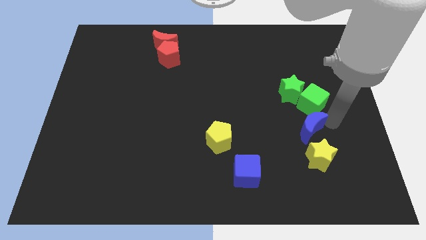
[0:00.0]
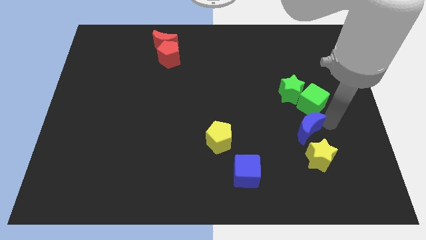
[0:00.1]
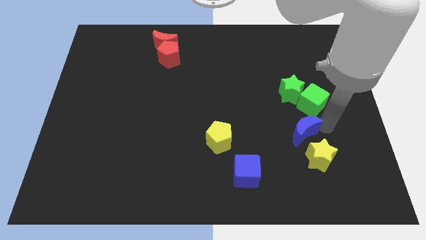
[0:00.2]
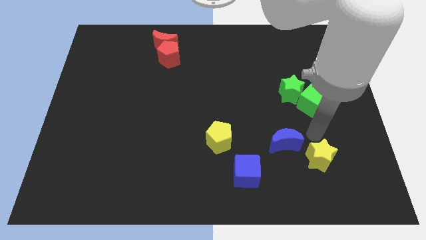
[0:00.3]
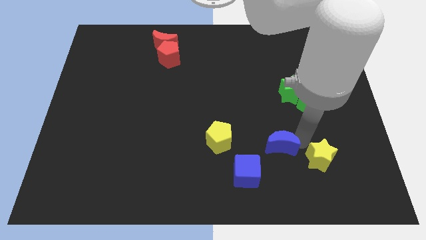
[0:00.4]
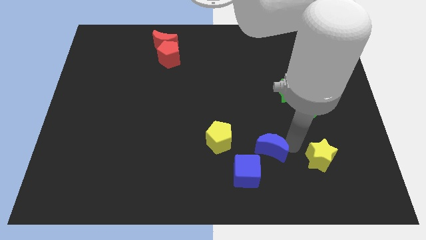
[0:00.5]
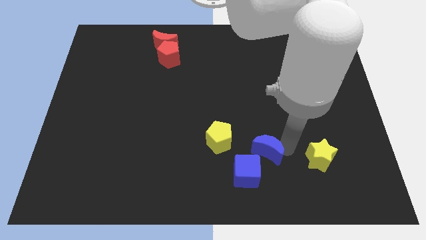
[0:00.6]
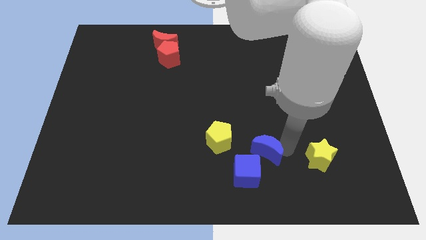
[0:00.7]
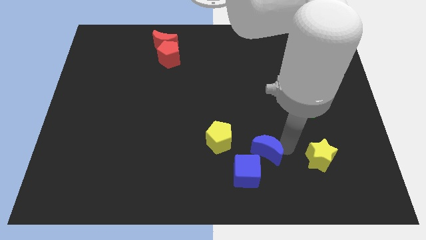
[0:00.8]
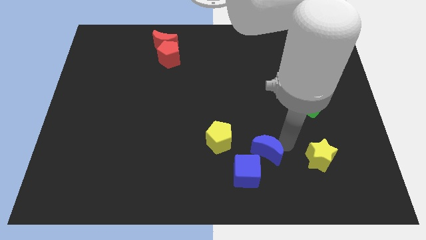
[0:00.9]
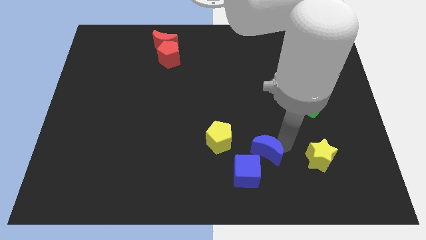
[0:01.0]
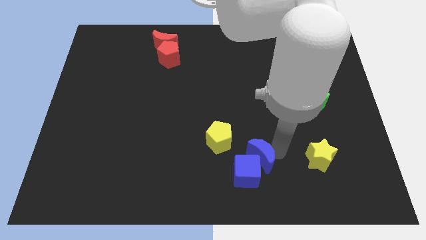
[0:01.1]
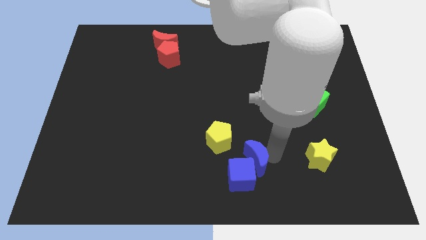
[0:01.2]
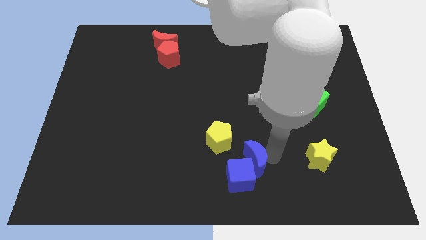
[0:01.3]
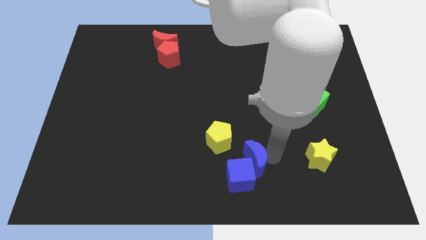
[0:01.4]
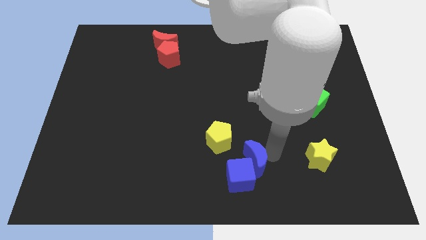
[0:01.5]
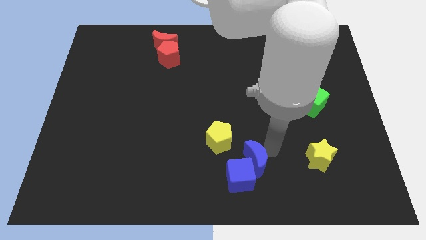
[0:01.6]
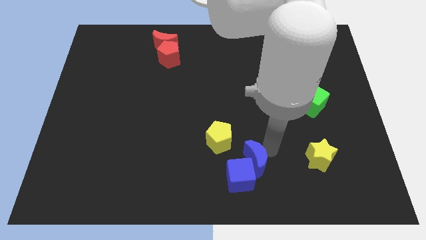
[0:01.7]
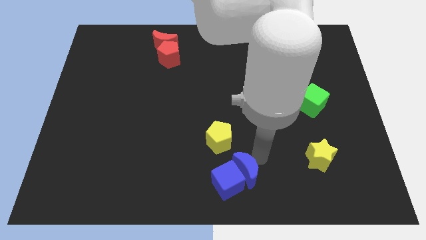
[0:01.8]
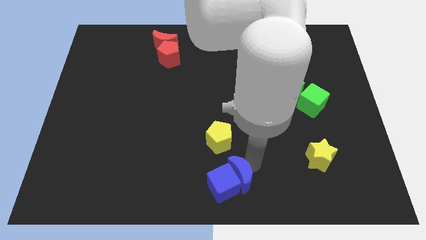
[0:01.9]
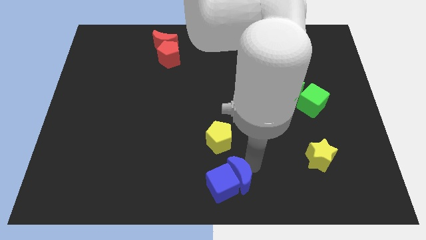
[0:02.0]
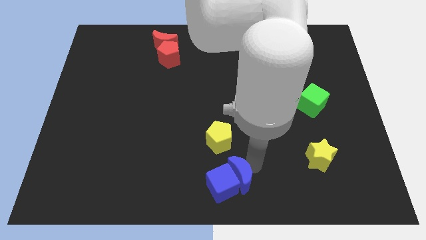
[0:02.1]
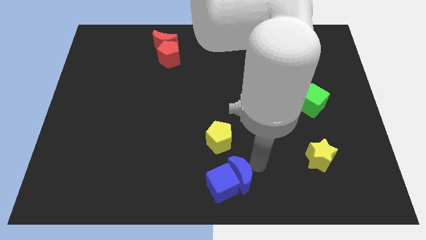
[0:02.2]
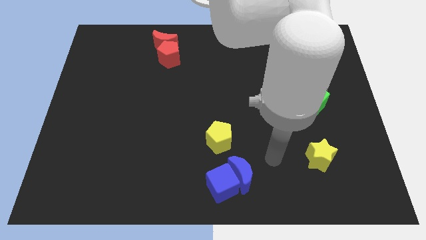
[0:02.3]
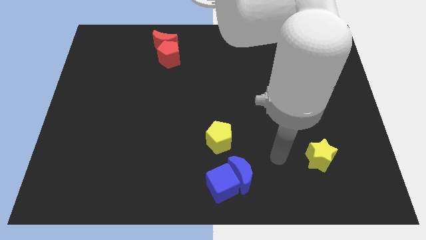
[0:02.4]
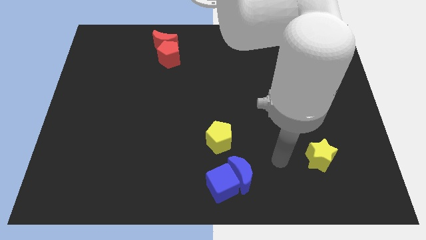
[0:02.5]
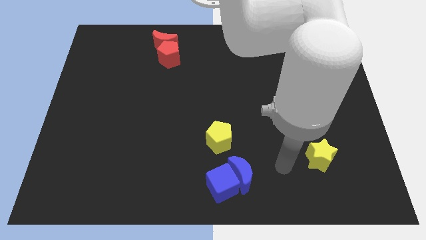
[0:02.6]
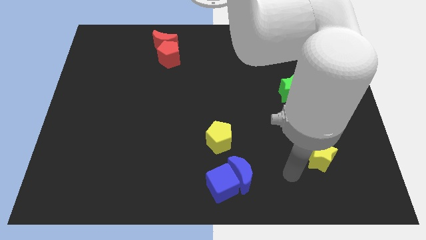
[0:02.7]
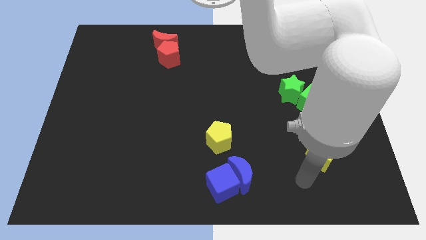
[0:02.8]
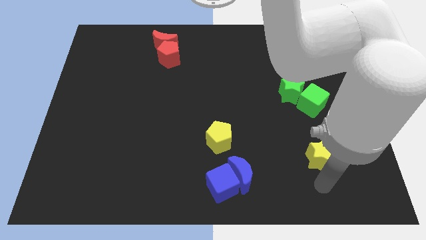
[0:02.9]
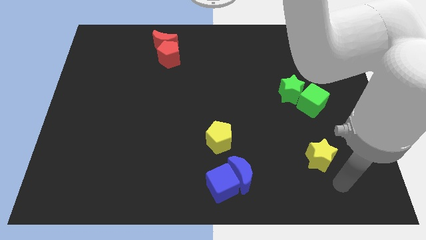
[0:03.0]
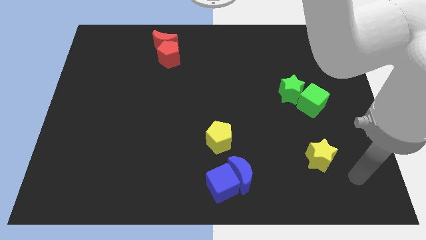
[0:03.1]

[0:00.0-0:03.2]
push the blue crescent into the blue cube

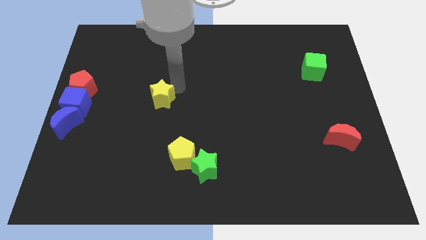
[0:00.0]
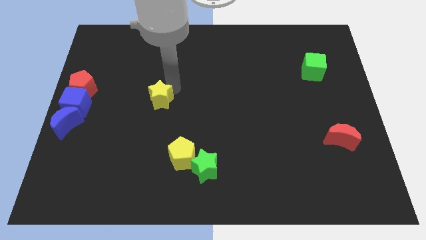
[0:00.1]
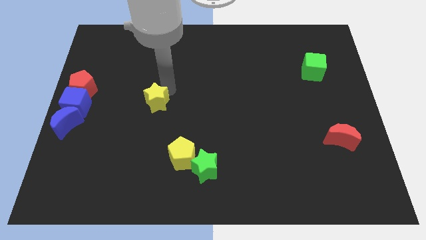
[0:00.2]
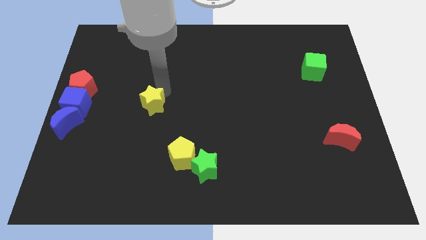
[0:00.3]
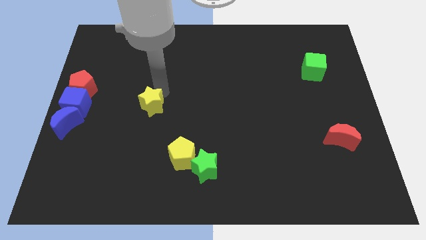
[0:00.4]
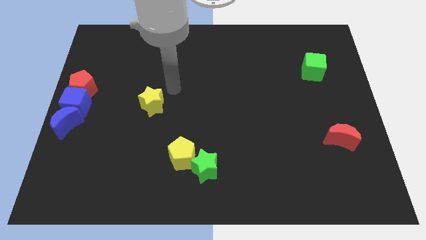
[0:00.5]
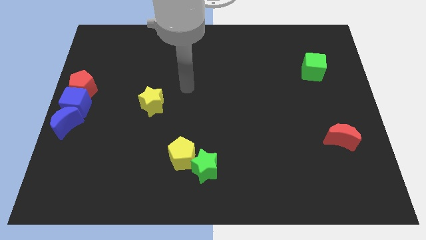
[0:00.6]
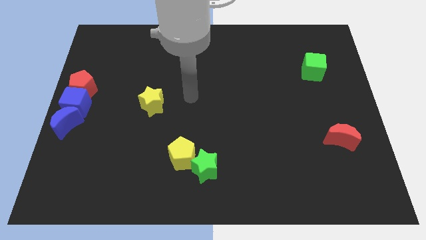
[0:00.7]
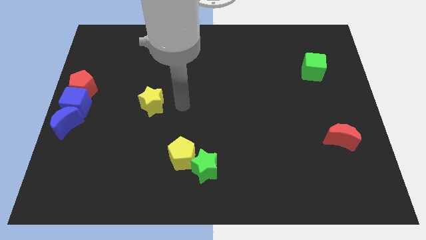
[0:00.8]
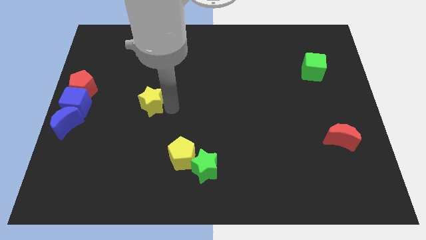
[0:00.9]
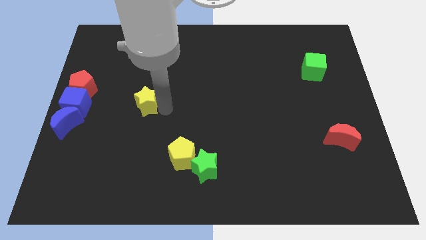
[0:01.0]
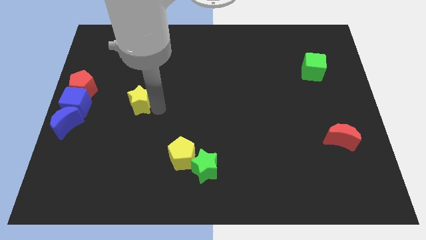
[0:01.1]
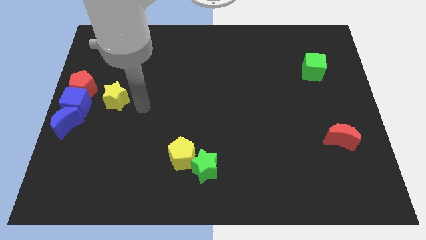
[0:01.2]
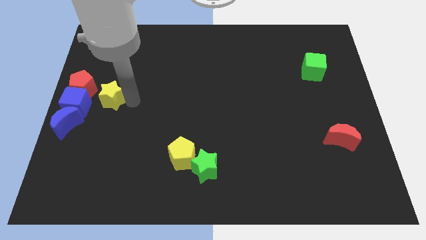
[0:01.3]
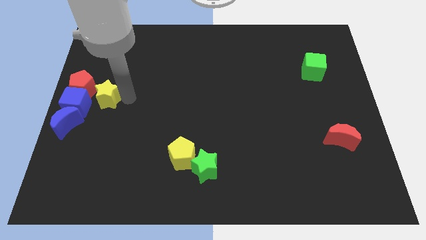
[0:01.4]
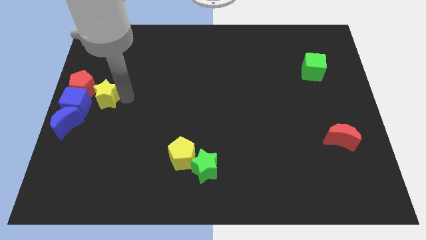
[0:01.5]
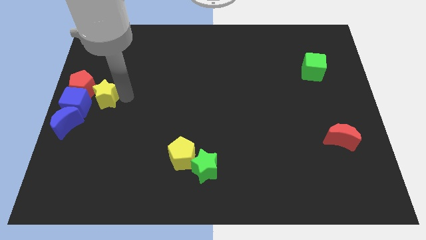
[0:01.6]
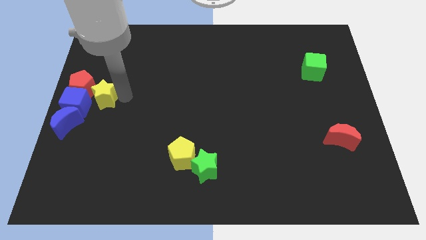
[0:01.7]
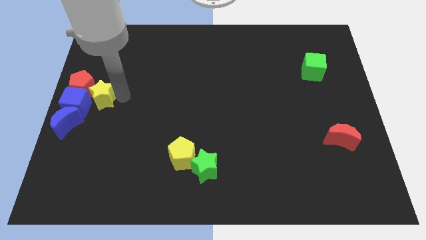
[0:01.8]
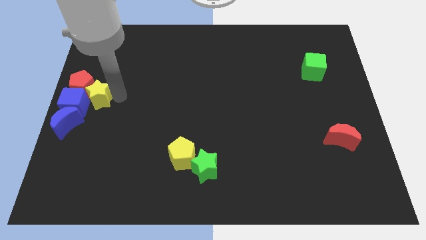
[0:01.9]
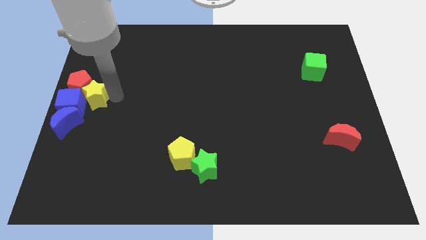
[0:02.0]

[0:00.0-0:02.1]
push the yellow star into the group of blocks

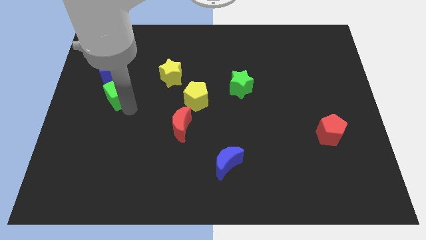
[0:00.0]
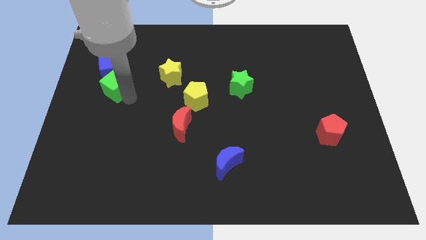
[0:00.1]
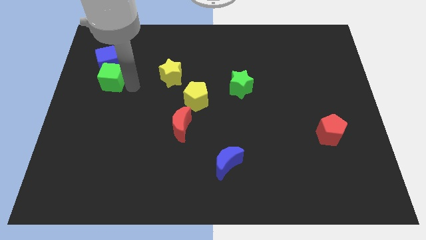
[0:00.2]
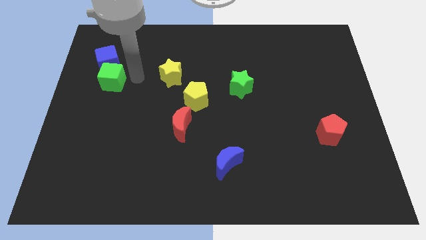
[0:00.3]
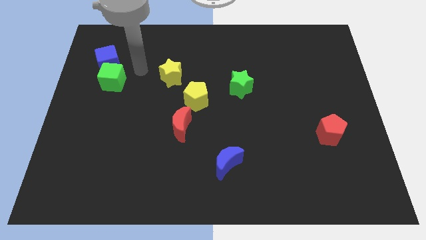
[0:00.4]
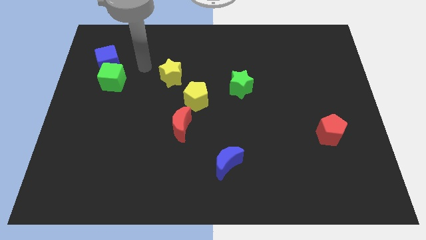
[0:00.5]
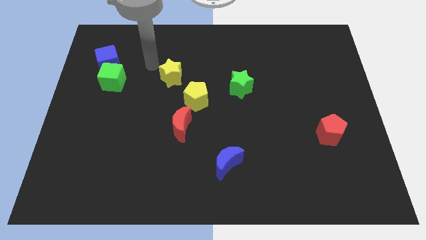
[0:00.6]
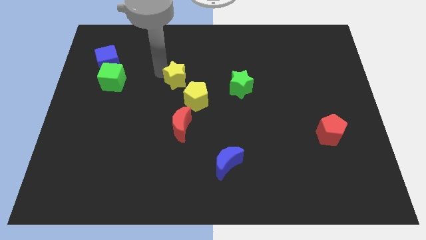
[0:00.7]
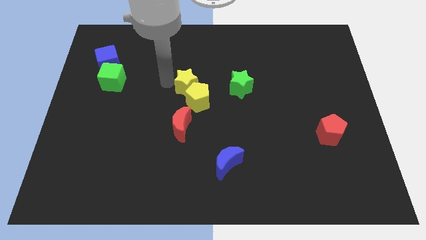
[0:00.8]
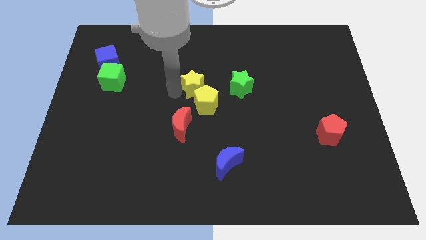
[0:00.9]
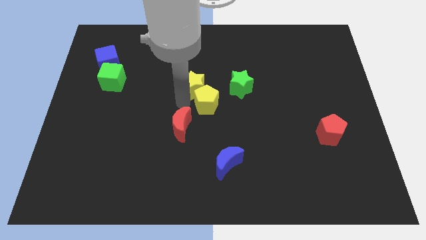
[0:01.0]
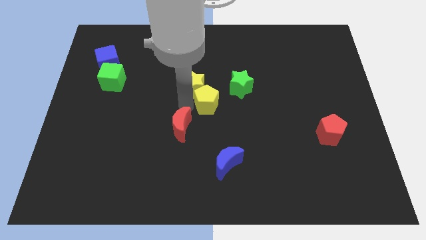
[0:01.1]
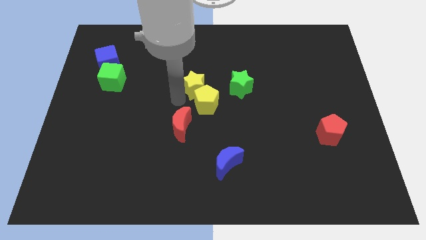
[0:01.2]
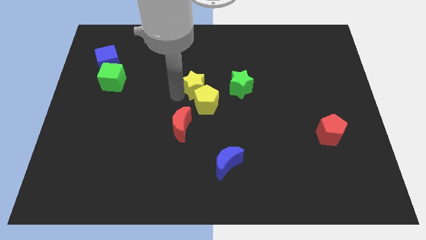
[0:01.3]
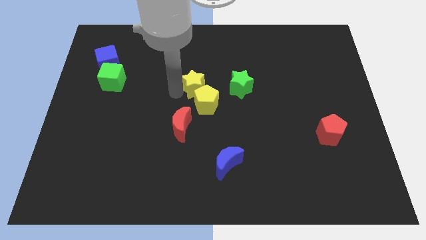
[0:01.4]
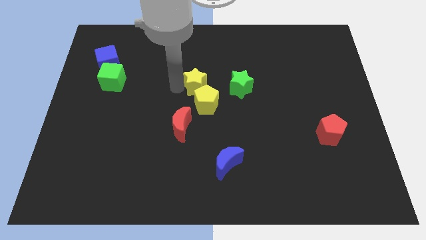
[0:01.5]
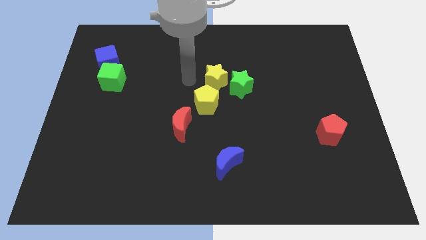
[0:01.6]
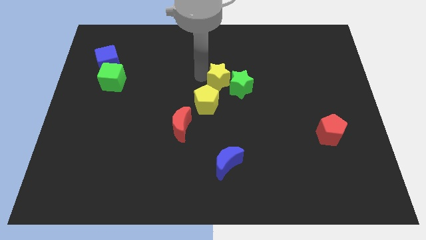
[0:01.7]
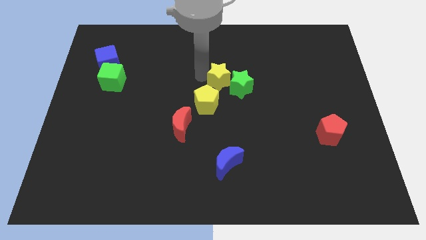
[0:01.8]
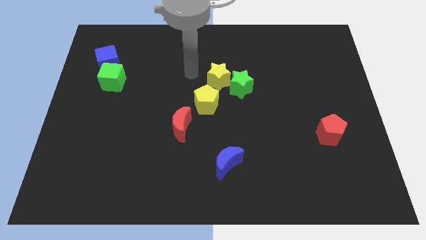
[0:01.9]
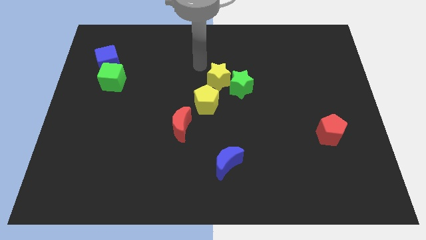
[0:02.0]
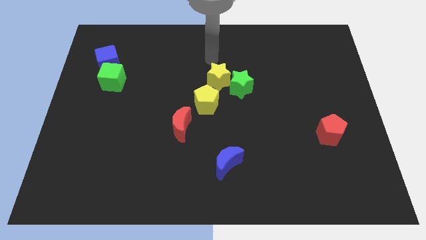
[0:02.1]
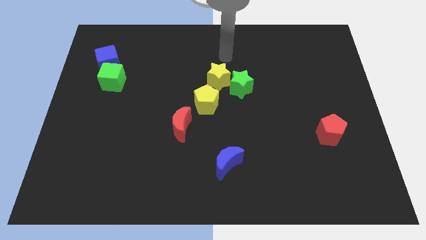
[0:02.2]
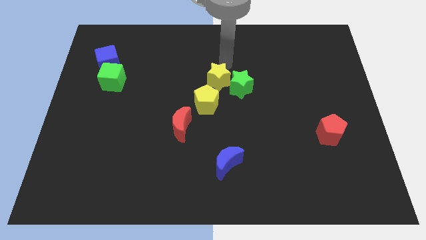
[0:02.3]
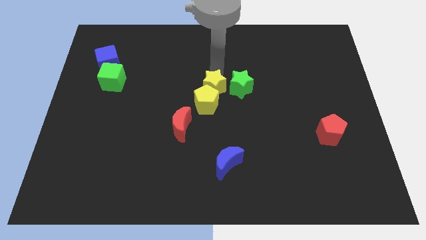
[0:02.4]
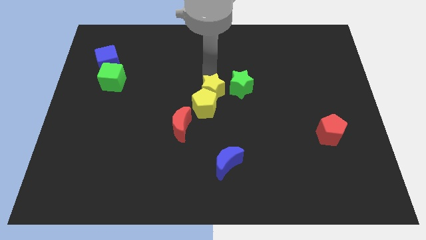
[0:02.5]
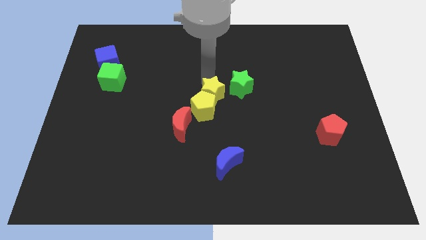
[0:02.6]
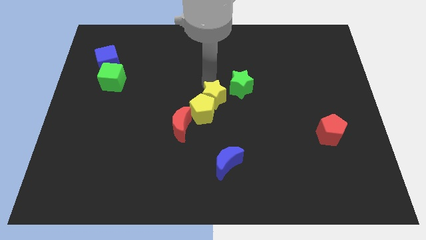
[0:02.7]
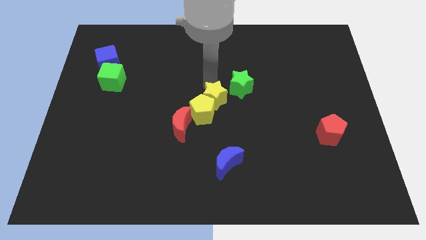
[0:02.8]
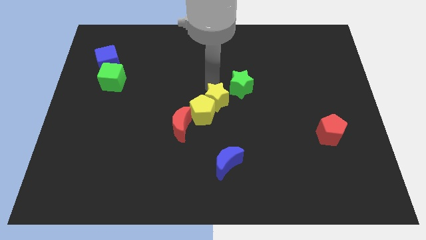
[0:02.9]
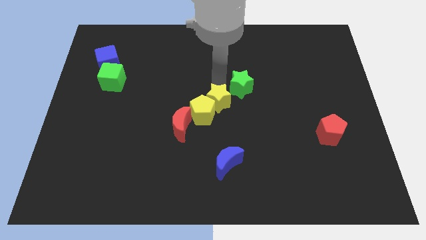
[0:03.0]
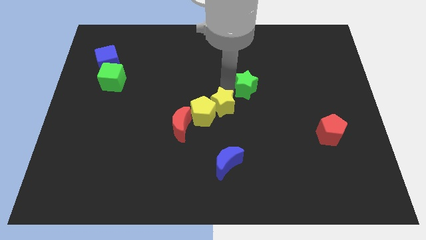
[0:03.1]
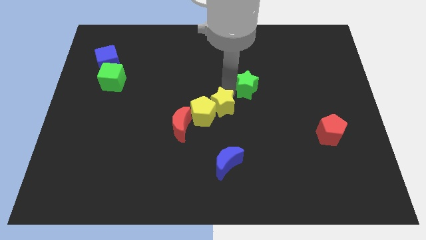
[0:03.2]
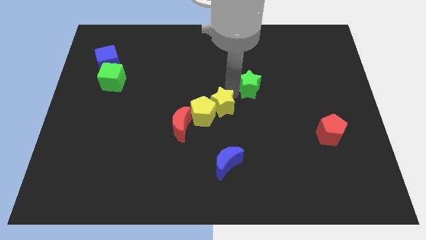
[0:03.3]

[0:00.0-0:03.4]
push the yellow star towards the yellow pentagon

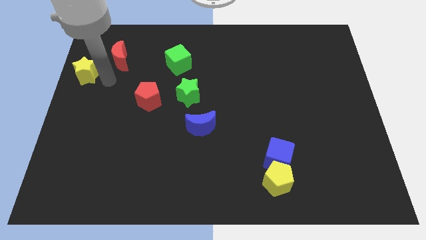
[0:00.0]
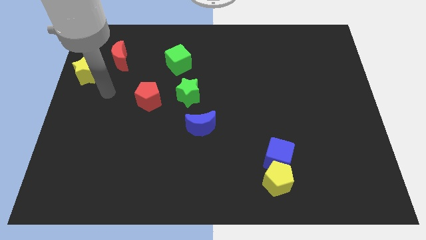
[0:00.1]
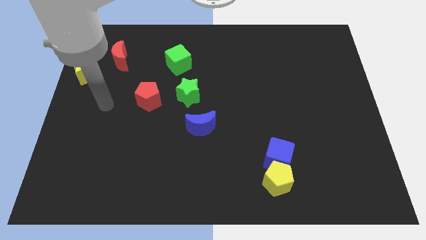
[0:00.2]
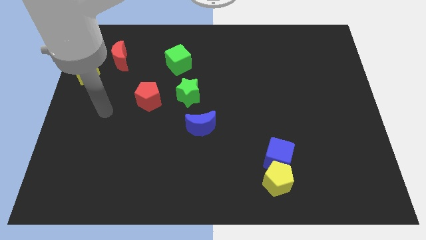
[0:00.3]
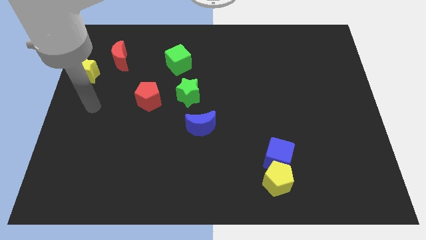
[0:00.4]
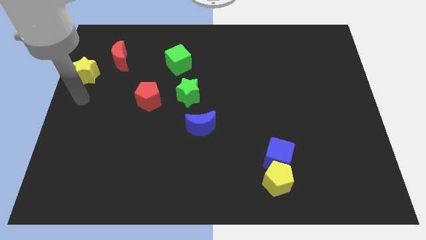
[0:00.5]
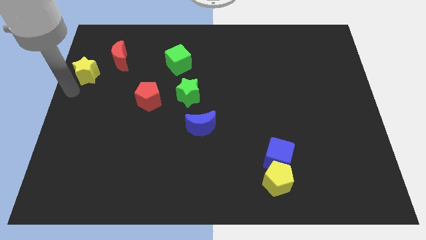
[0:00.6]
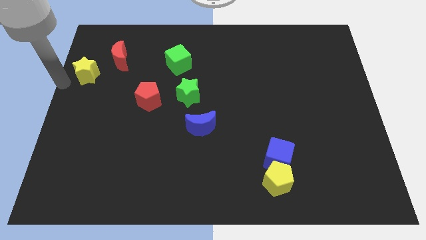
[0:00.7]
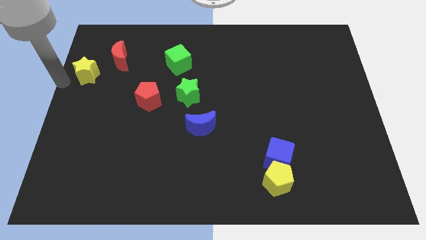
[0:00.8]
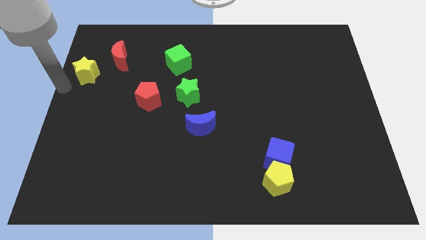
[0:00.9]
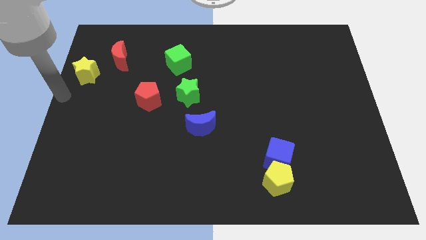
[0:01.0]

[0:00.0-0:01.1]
move your arm away from yellow star
